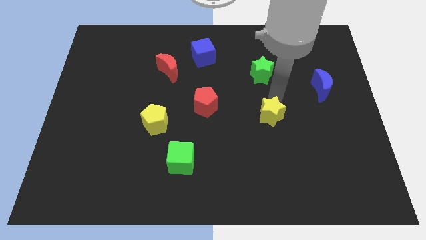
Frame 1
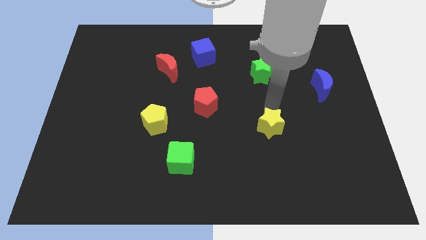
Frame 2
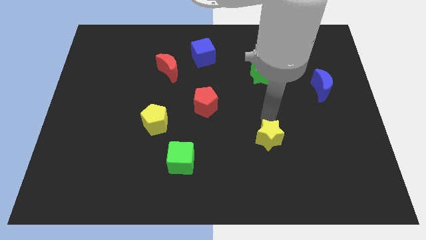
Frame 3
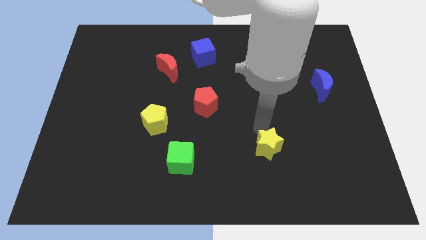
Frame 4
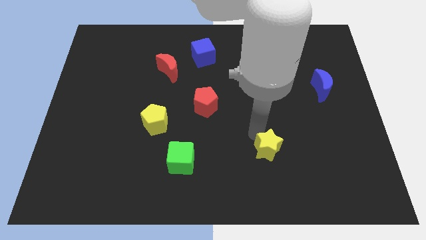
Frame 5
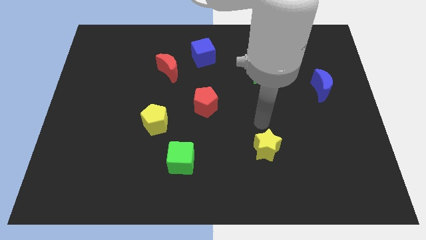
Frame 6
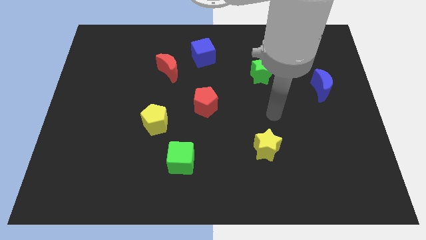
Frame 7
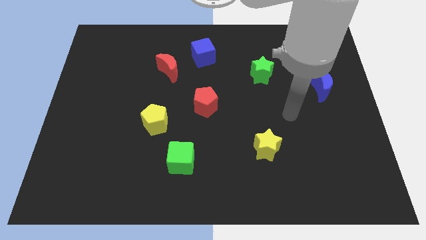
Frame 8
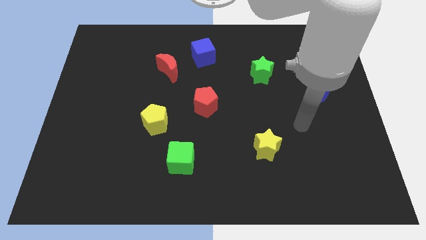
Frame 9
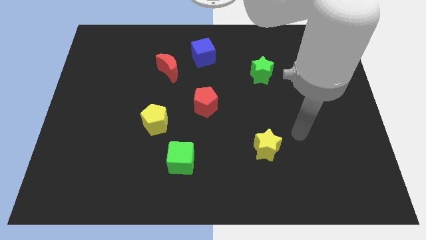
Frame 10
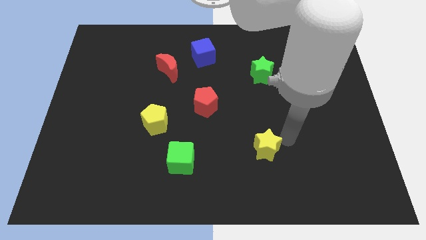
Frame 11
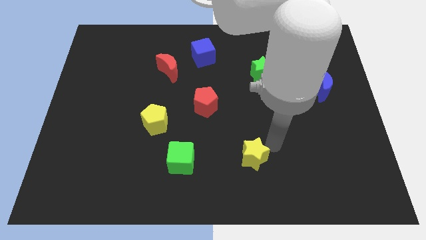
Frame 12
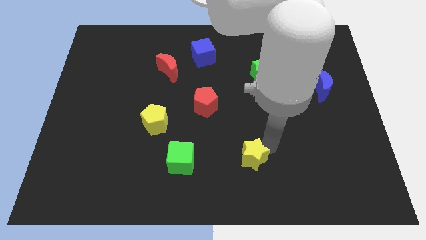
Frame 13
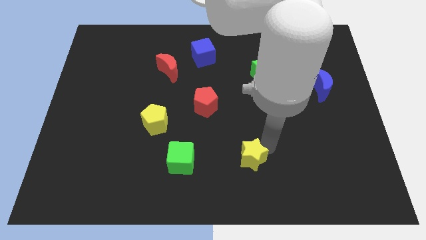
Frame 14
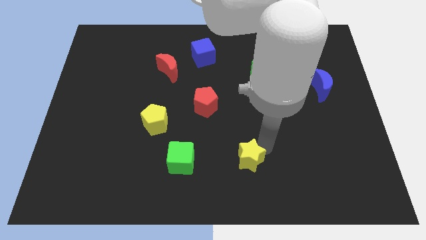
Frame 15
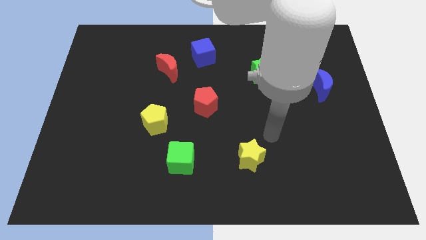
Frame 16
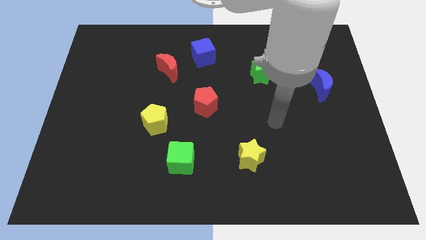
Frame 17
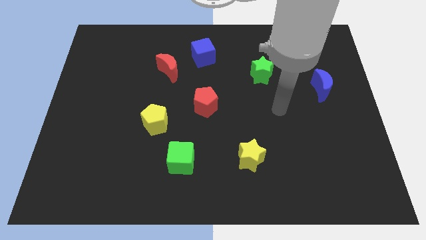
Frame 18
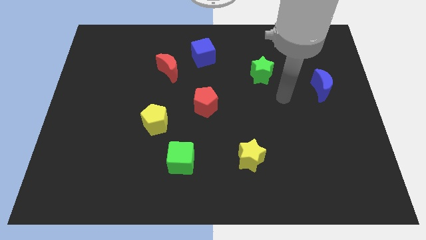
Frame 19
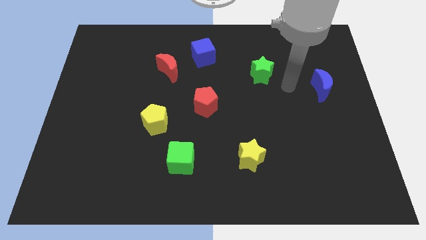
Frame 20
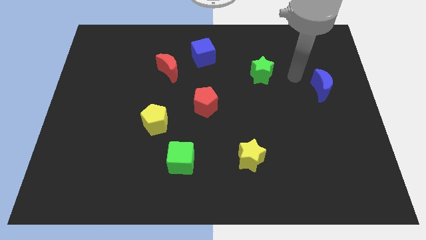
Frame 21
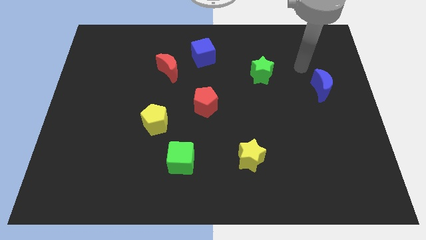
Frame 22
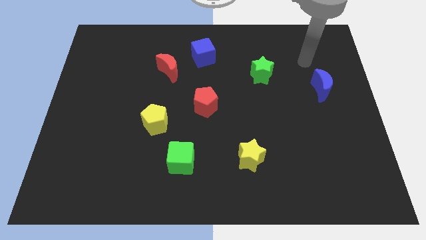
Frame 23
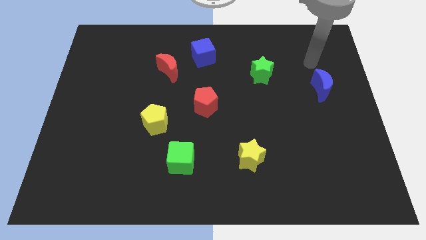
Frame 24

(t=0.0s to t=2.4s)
push the yellow star to the right of the green cube

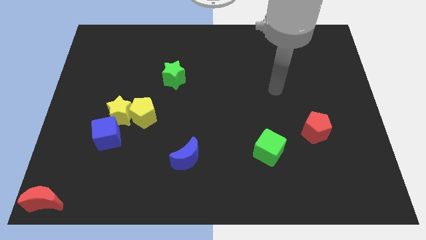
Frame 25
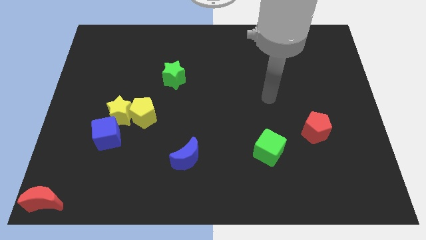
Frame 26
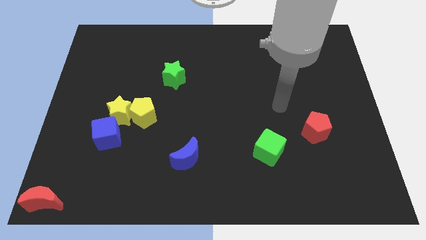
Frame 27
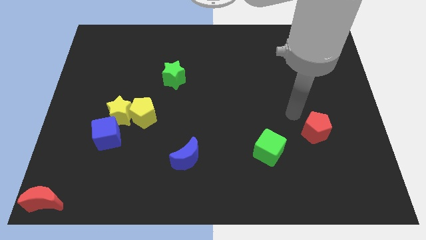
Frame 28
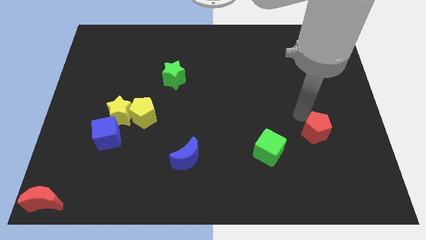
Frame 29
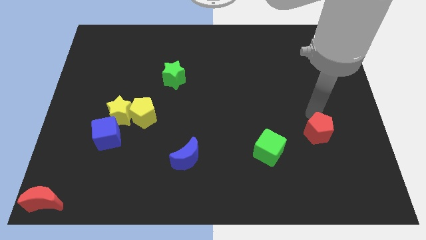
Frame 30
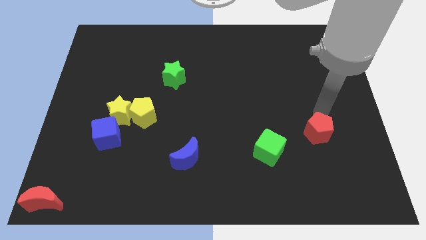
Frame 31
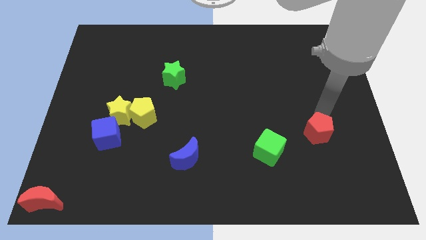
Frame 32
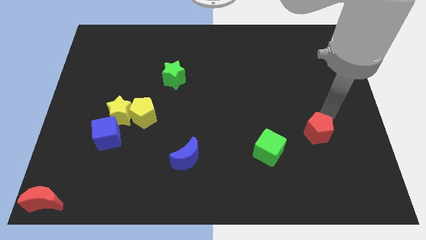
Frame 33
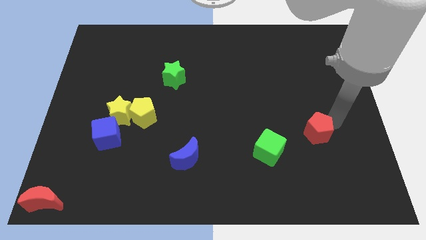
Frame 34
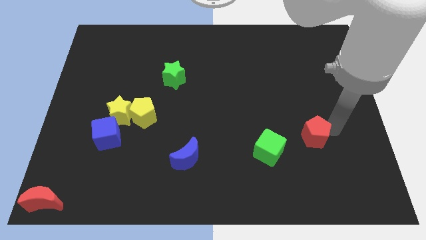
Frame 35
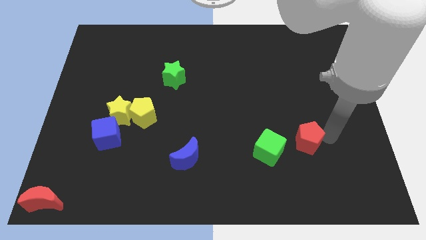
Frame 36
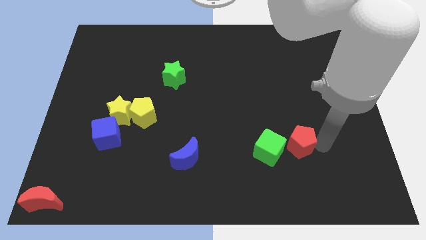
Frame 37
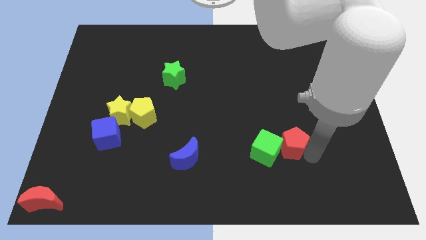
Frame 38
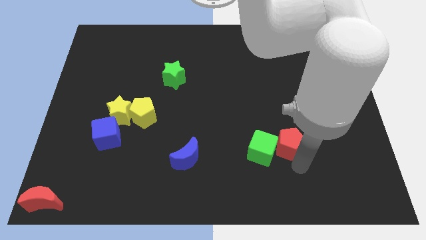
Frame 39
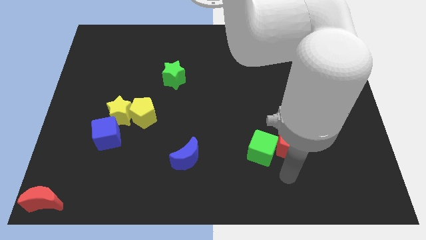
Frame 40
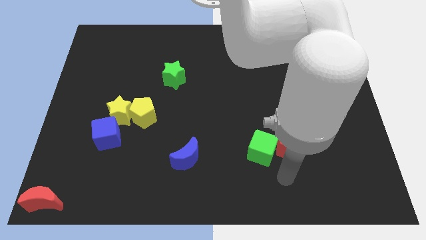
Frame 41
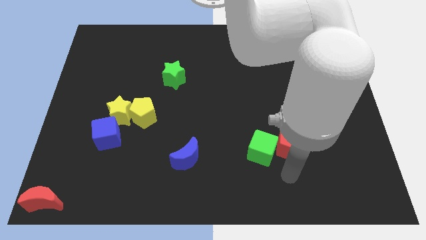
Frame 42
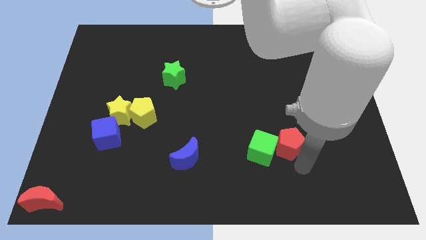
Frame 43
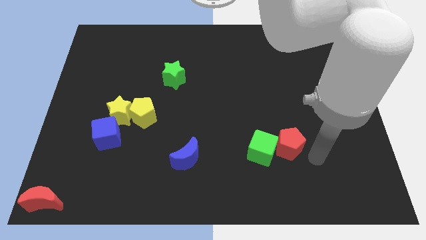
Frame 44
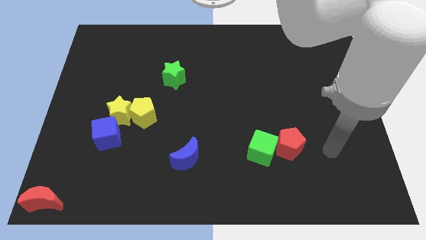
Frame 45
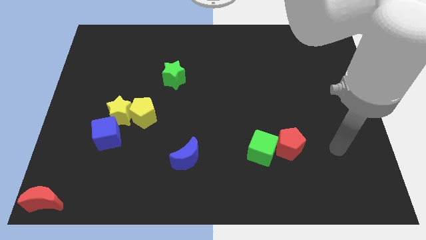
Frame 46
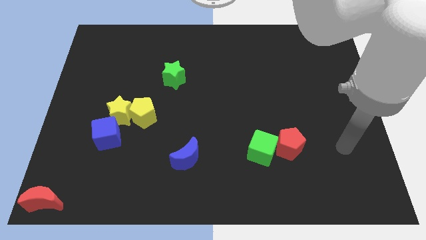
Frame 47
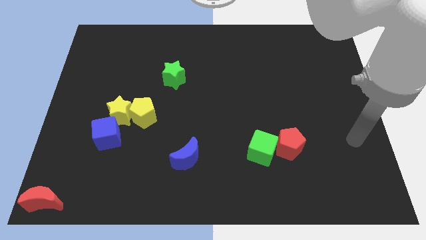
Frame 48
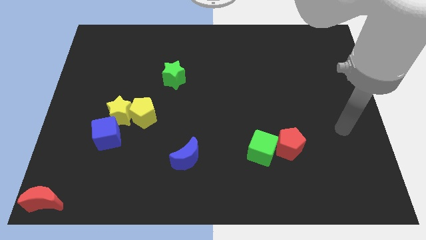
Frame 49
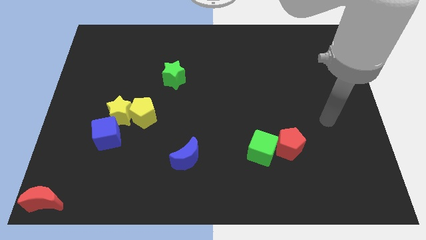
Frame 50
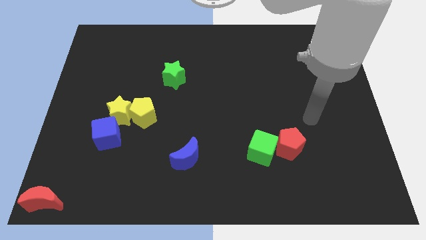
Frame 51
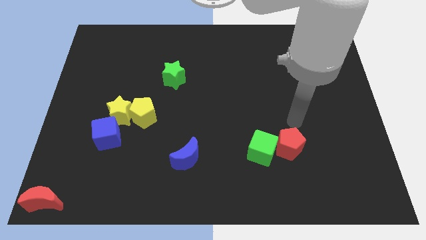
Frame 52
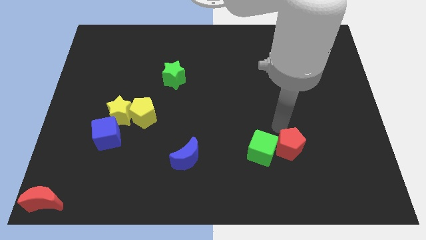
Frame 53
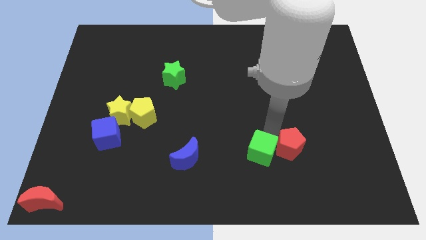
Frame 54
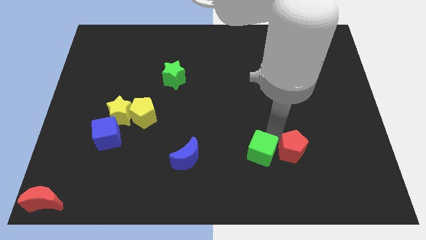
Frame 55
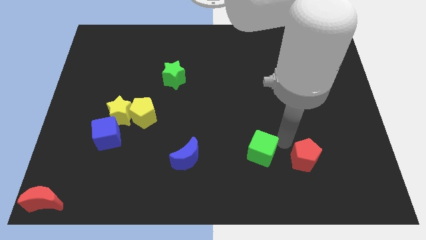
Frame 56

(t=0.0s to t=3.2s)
push the red pentagon beside the green cube

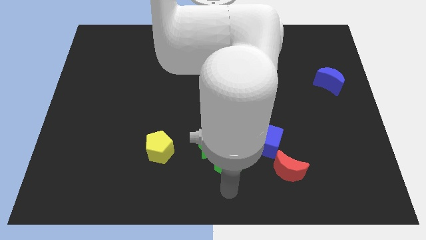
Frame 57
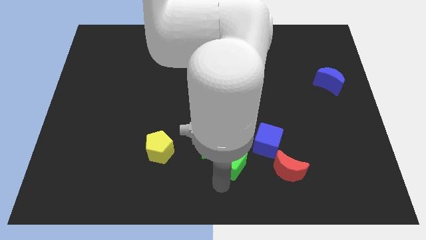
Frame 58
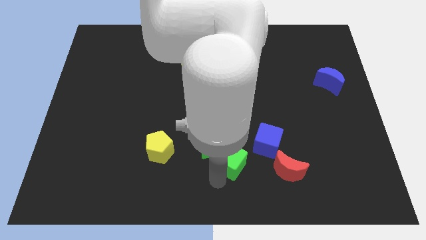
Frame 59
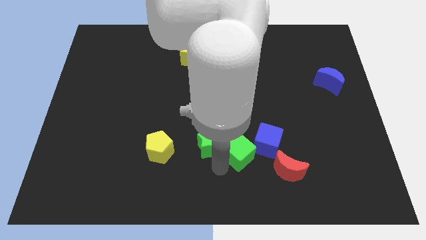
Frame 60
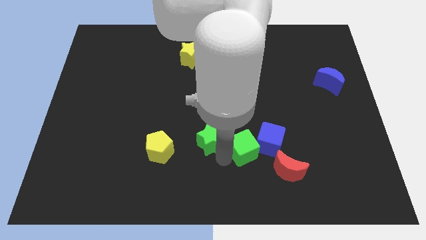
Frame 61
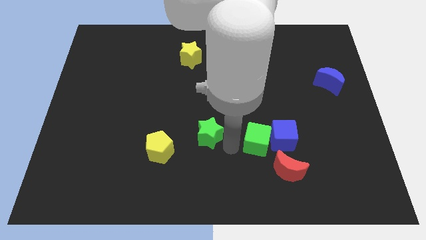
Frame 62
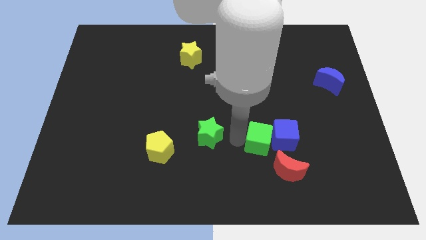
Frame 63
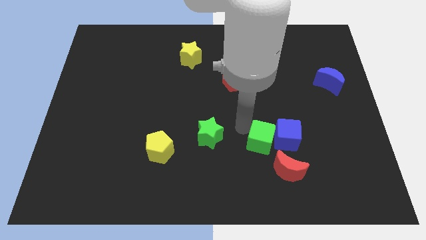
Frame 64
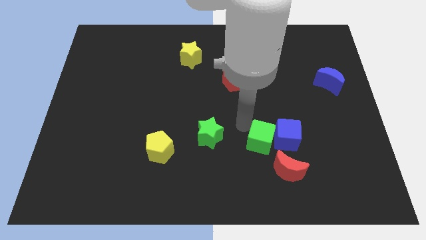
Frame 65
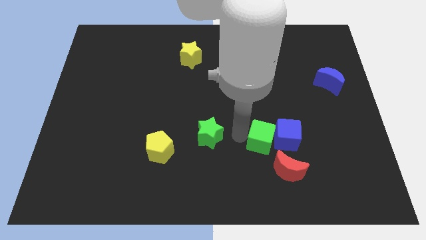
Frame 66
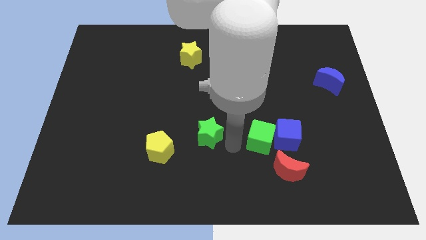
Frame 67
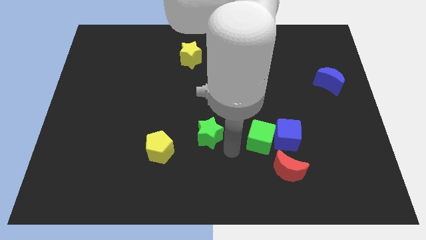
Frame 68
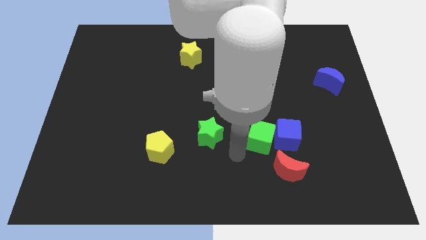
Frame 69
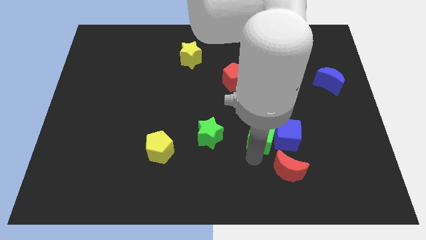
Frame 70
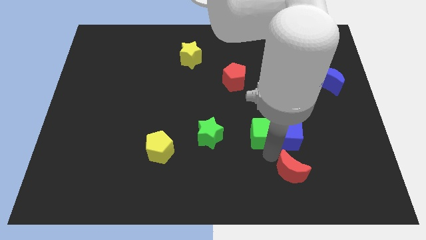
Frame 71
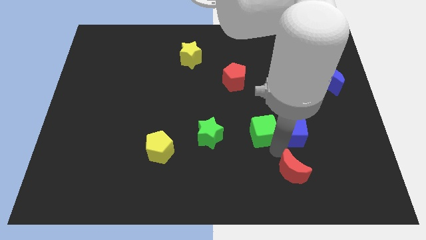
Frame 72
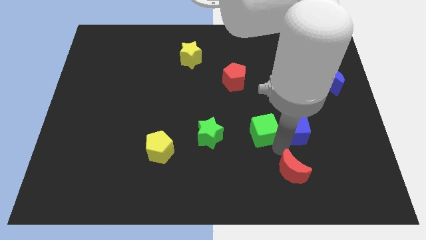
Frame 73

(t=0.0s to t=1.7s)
move green cube to the left of blue cube

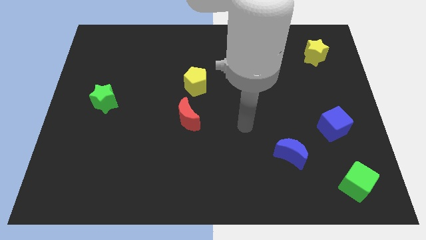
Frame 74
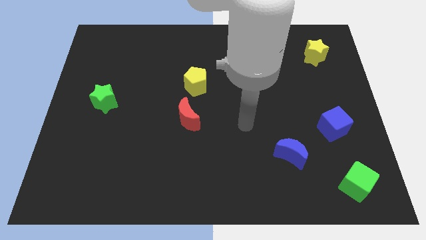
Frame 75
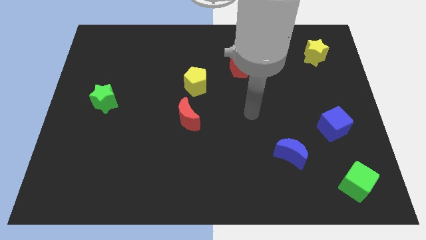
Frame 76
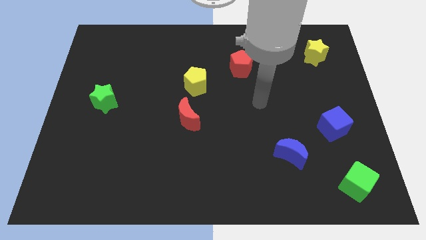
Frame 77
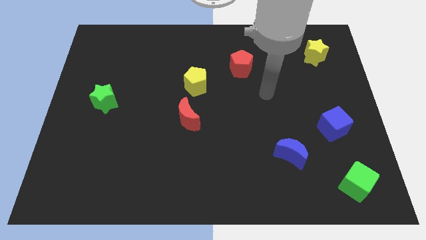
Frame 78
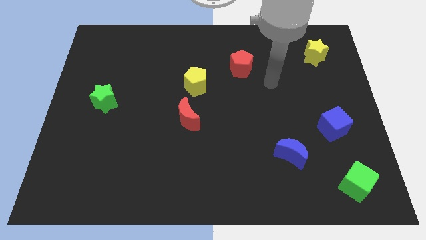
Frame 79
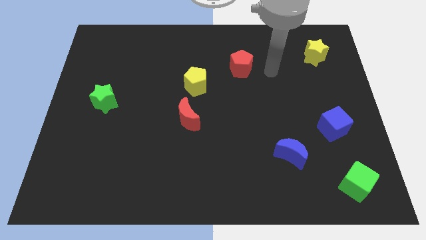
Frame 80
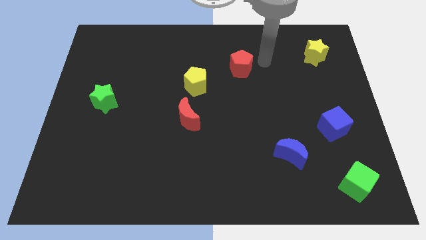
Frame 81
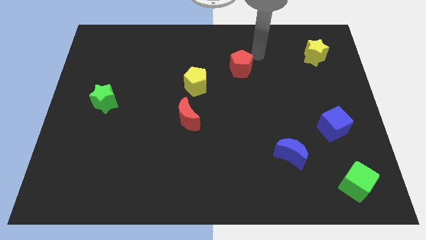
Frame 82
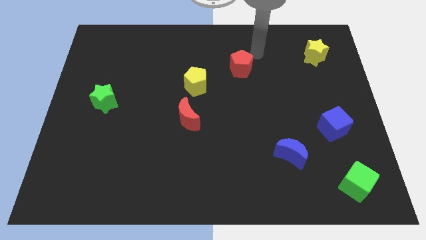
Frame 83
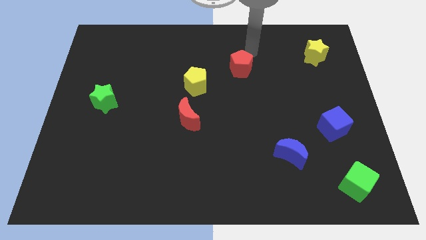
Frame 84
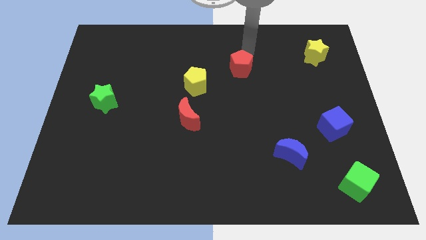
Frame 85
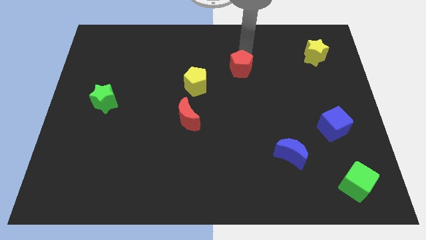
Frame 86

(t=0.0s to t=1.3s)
place your arm to the top of the red pentagon
